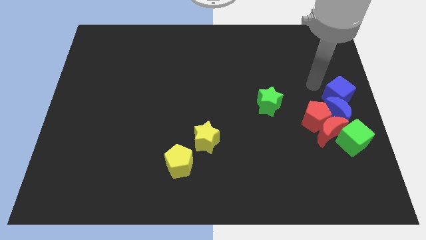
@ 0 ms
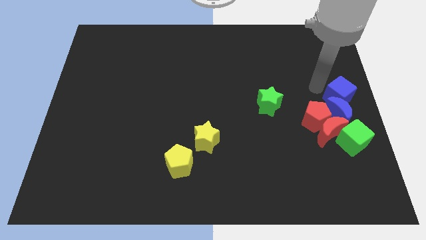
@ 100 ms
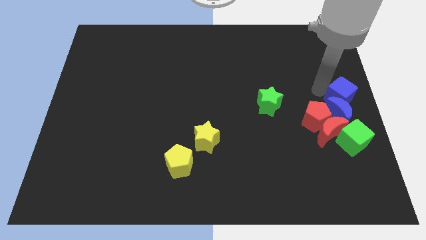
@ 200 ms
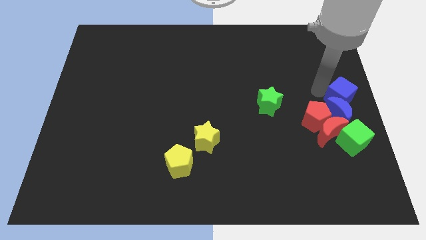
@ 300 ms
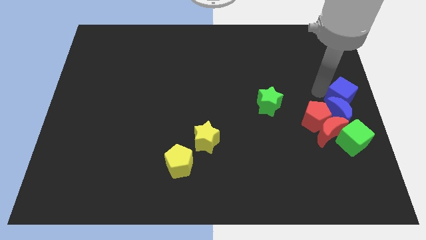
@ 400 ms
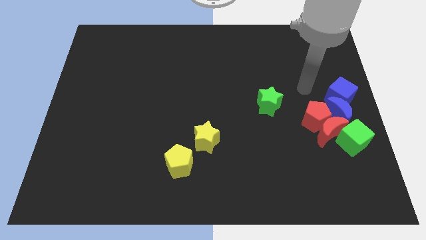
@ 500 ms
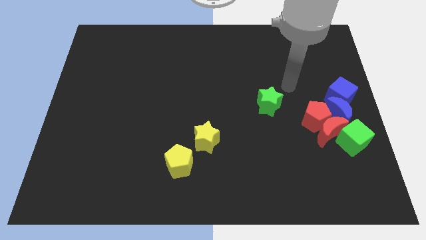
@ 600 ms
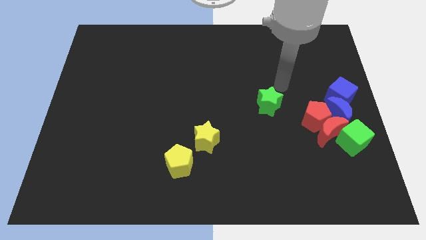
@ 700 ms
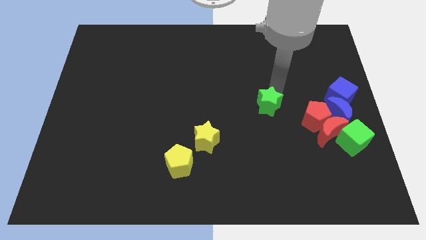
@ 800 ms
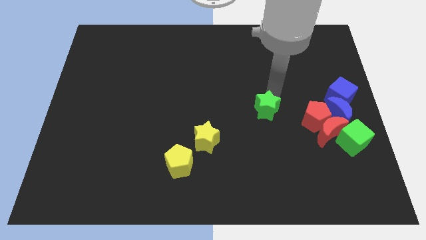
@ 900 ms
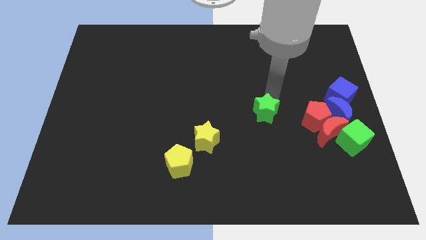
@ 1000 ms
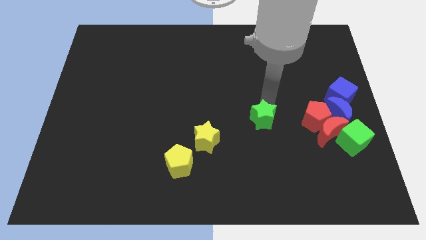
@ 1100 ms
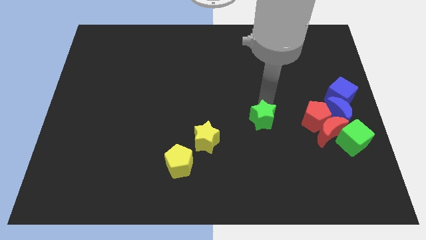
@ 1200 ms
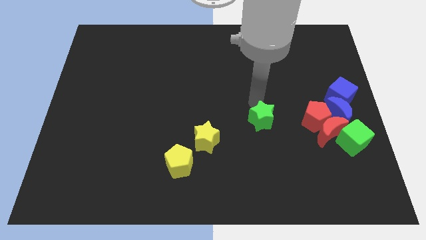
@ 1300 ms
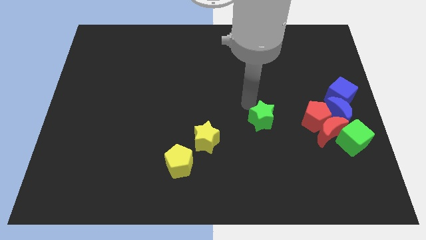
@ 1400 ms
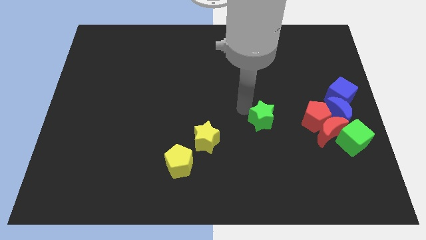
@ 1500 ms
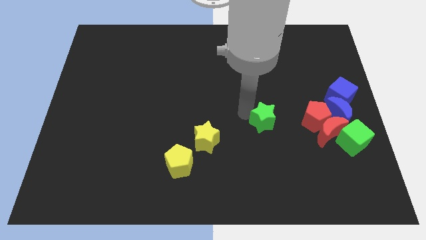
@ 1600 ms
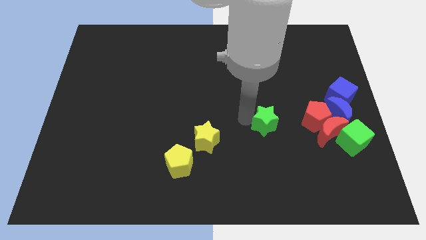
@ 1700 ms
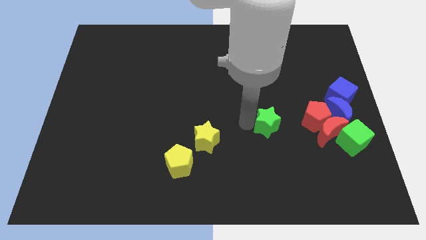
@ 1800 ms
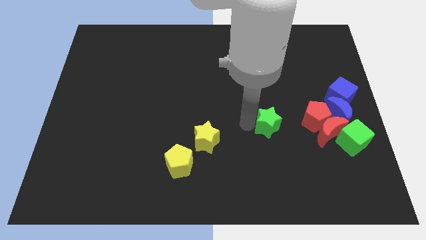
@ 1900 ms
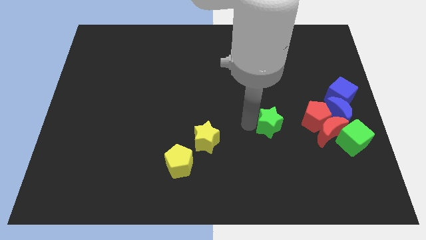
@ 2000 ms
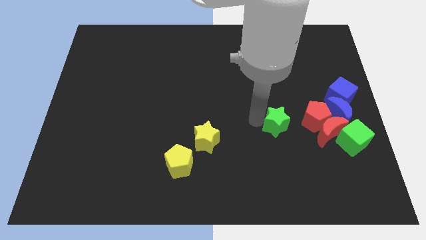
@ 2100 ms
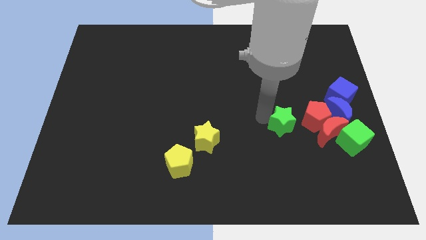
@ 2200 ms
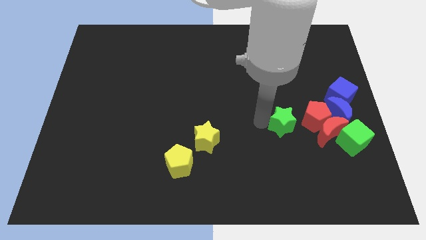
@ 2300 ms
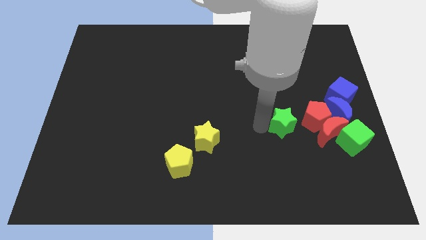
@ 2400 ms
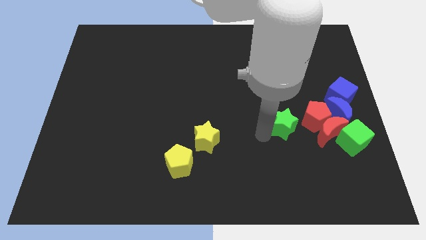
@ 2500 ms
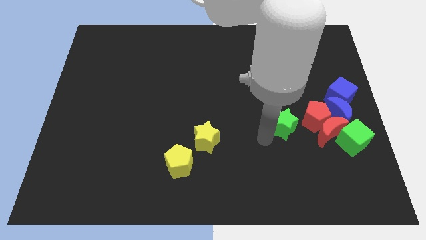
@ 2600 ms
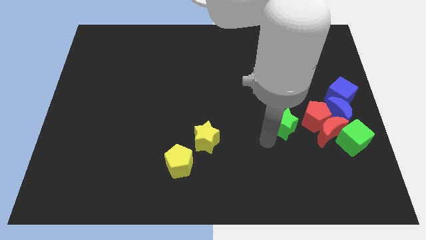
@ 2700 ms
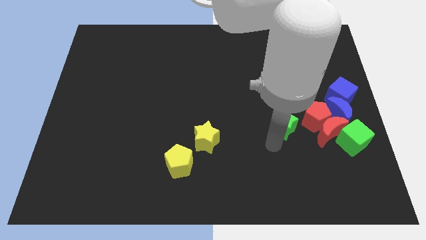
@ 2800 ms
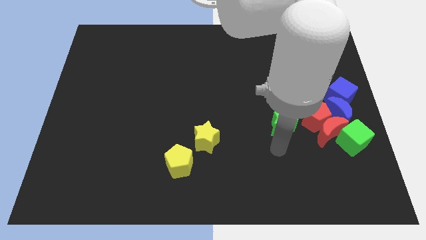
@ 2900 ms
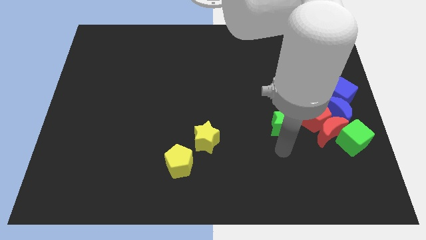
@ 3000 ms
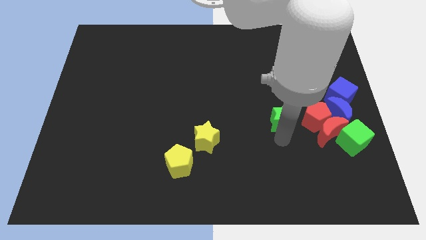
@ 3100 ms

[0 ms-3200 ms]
move the green star to the left of the red pentagon

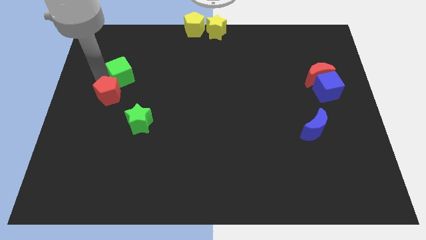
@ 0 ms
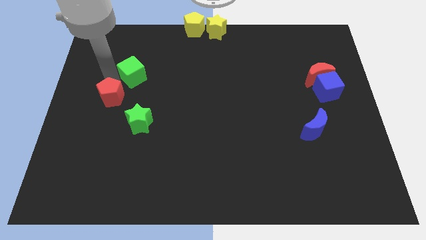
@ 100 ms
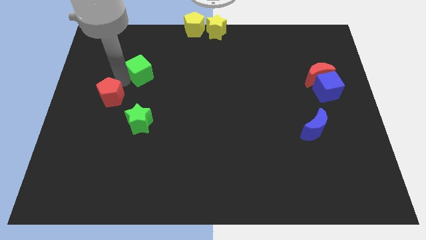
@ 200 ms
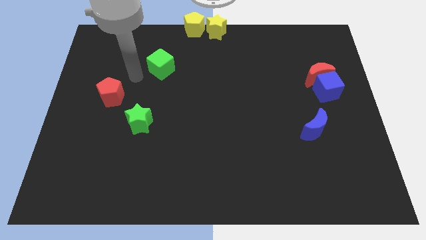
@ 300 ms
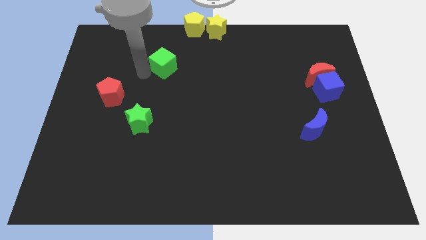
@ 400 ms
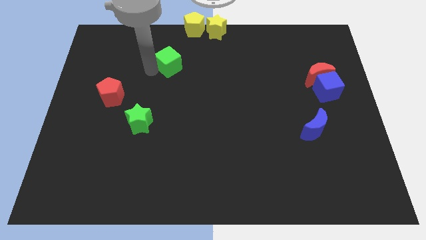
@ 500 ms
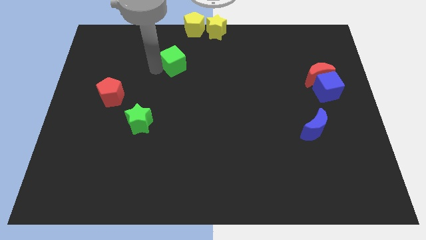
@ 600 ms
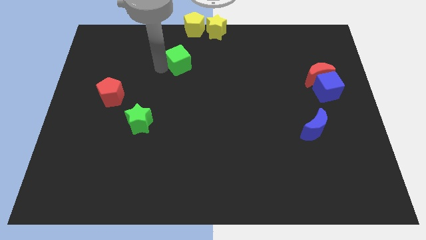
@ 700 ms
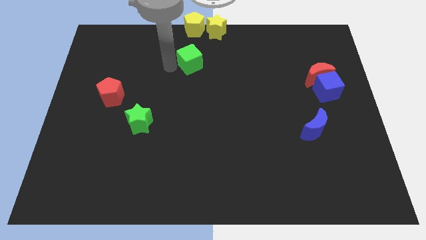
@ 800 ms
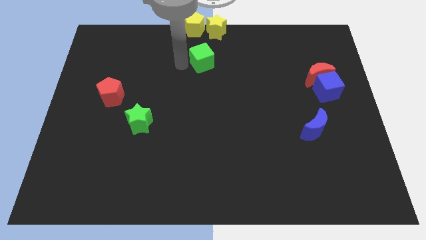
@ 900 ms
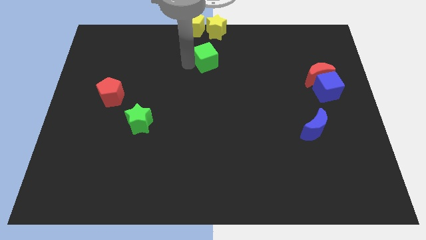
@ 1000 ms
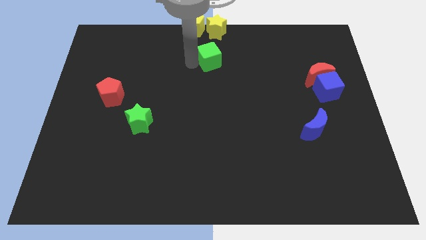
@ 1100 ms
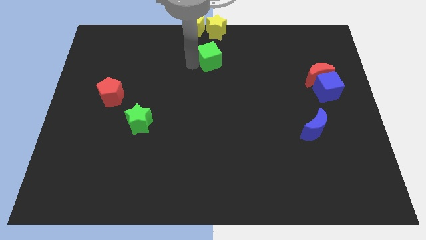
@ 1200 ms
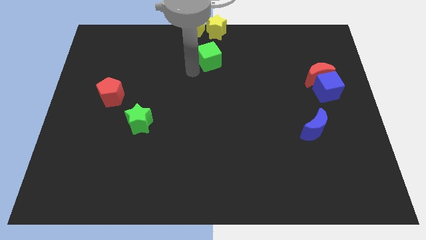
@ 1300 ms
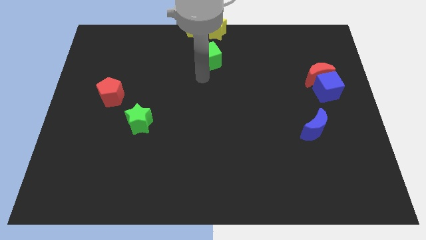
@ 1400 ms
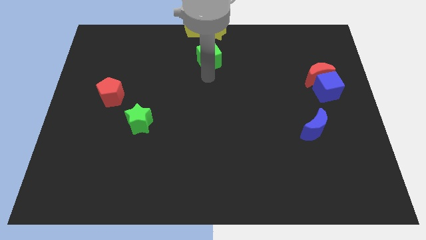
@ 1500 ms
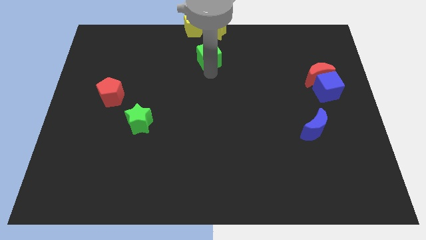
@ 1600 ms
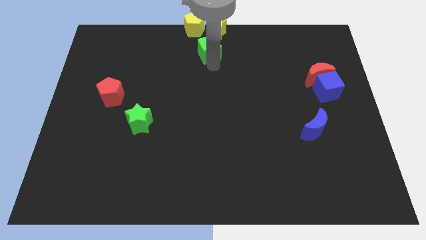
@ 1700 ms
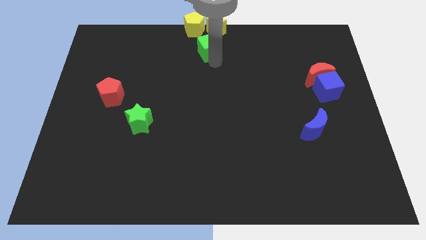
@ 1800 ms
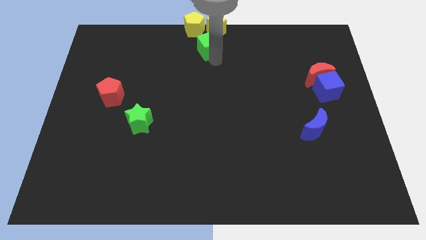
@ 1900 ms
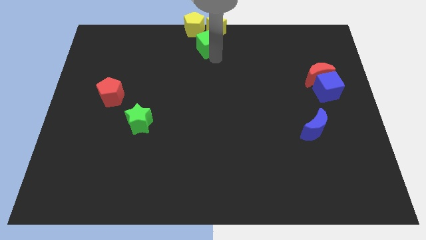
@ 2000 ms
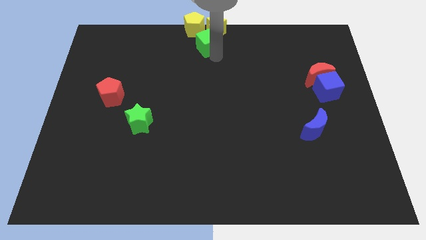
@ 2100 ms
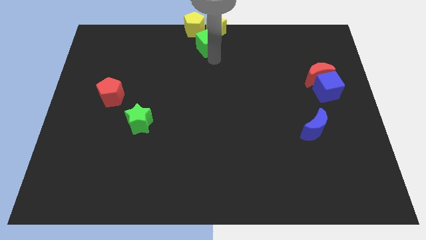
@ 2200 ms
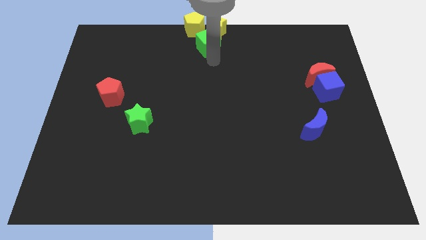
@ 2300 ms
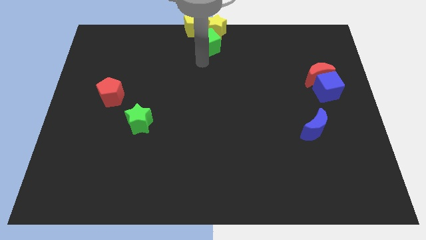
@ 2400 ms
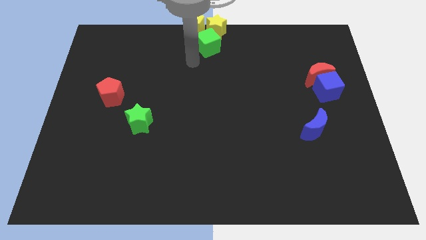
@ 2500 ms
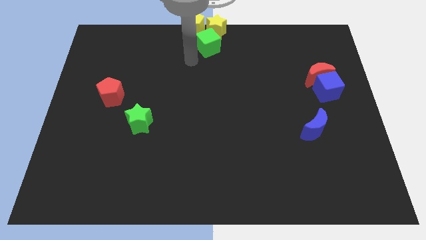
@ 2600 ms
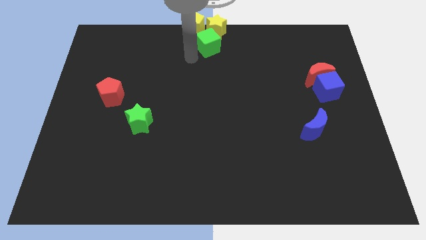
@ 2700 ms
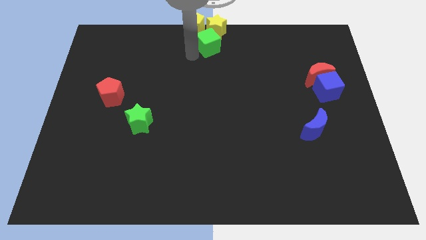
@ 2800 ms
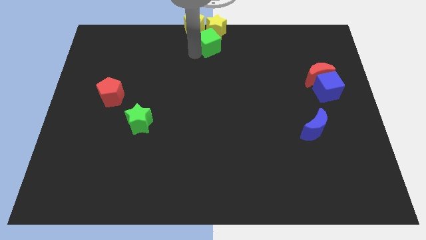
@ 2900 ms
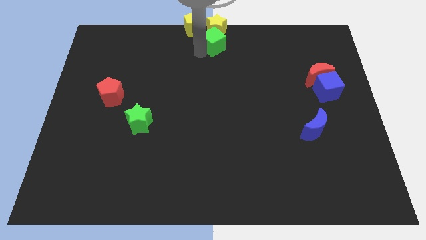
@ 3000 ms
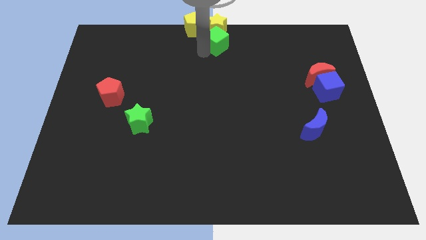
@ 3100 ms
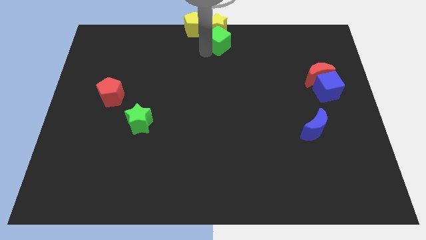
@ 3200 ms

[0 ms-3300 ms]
push the green cube to the bottom of the yellow star

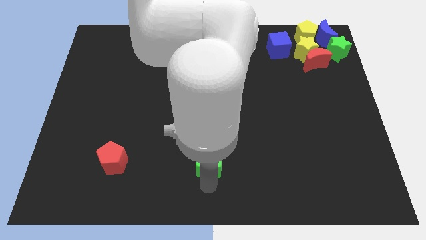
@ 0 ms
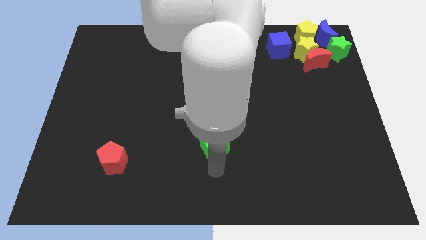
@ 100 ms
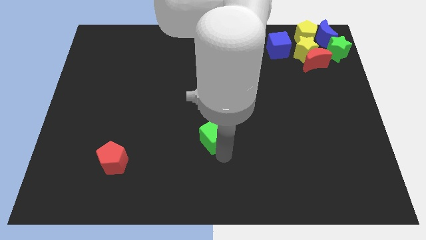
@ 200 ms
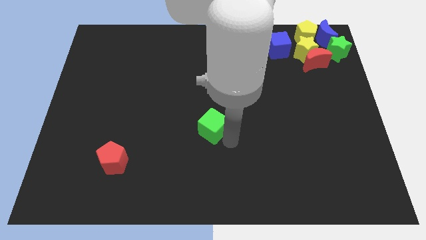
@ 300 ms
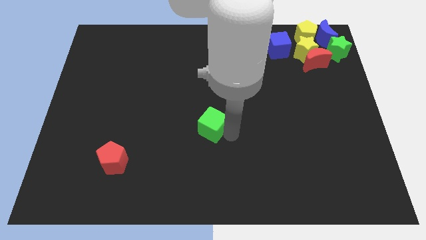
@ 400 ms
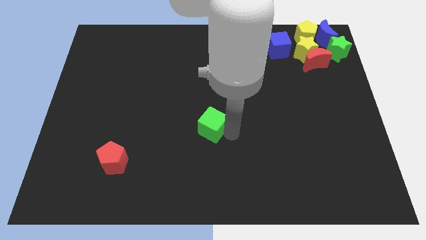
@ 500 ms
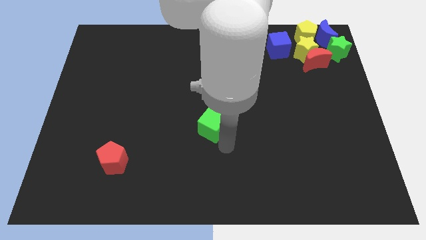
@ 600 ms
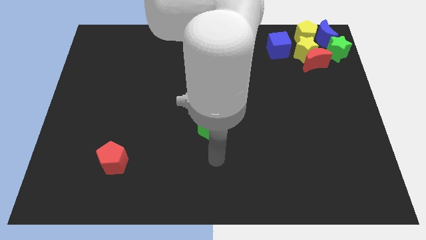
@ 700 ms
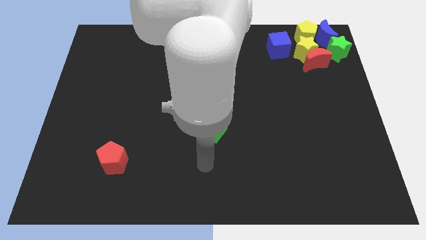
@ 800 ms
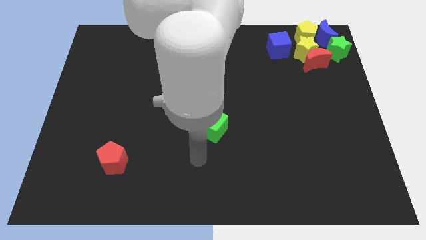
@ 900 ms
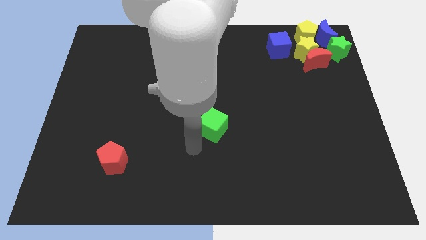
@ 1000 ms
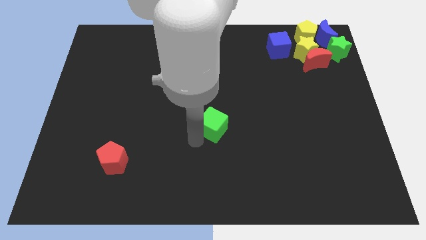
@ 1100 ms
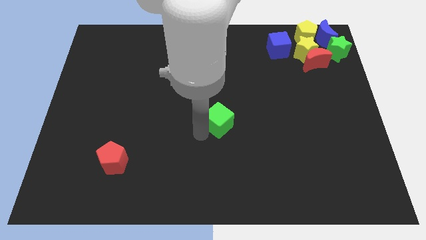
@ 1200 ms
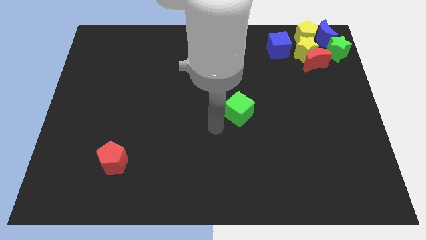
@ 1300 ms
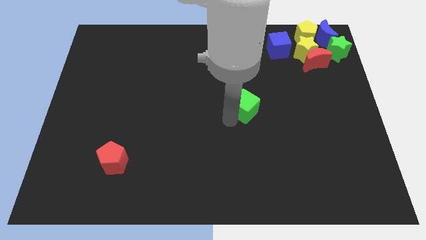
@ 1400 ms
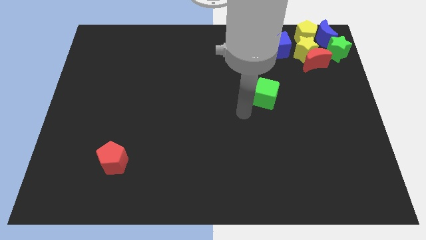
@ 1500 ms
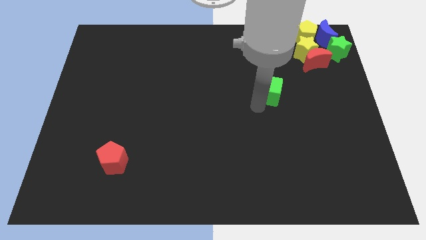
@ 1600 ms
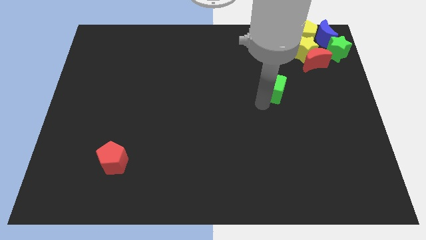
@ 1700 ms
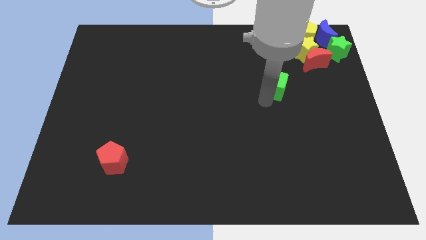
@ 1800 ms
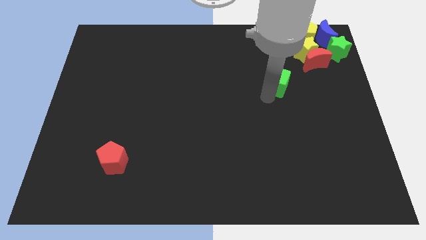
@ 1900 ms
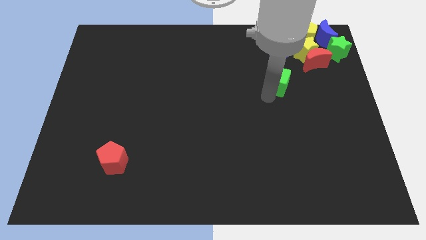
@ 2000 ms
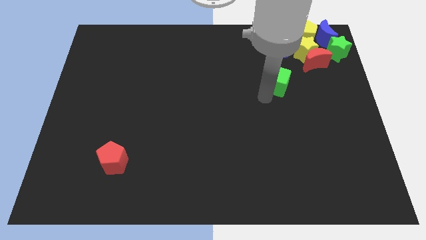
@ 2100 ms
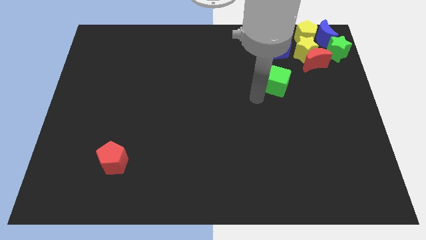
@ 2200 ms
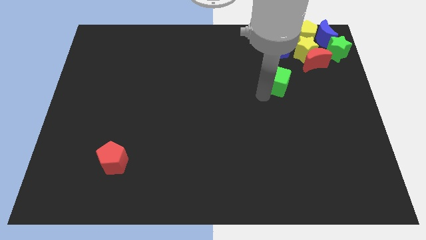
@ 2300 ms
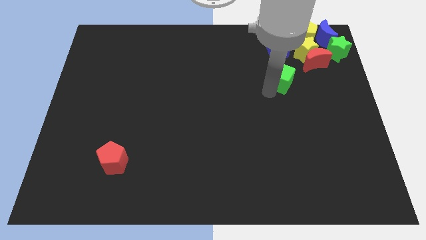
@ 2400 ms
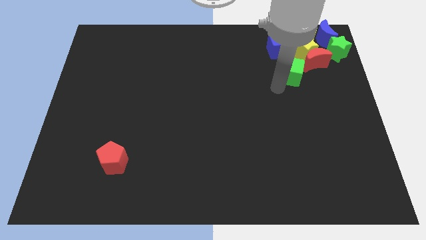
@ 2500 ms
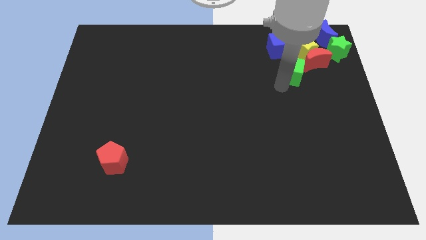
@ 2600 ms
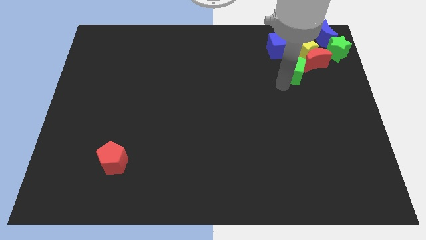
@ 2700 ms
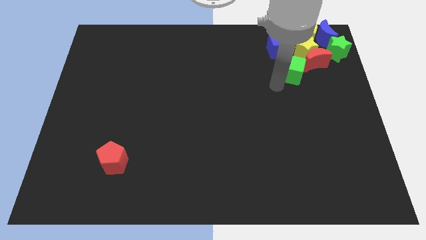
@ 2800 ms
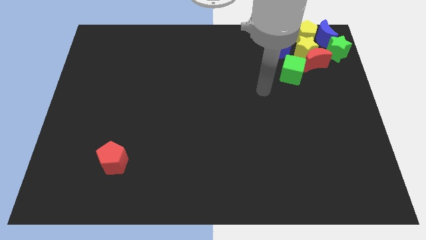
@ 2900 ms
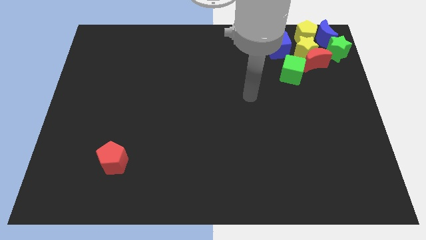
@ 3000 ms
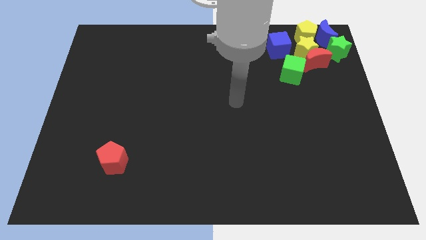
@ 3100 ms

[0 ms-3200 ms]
push the green cube towards the red crescent
